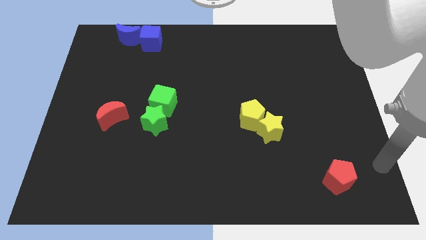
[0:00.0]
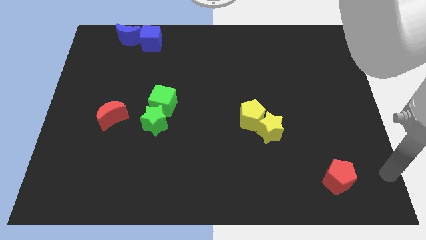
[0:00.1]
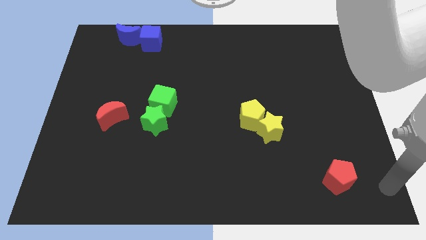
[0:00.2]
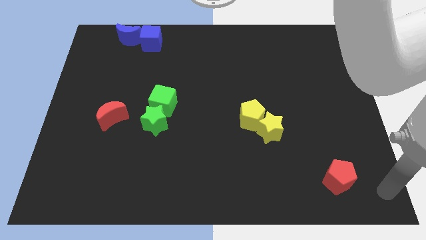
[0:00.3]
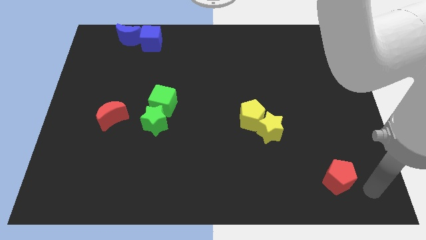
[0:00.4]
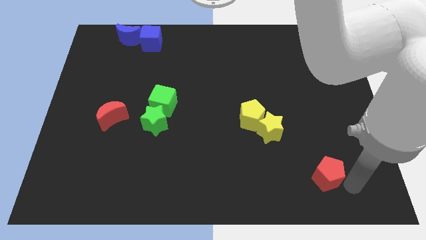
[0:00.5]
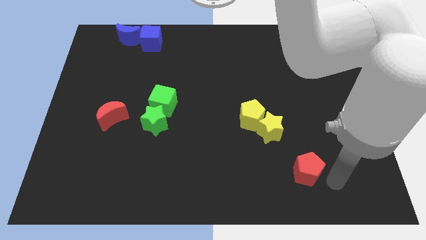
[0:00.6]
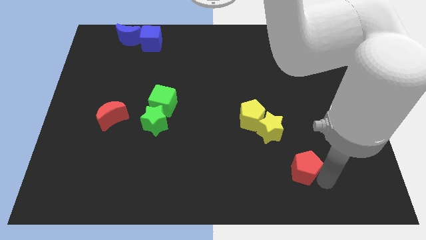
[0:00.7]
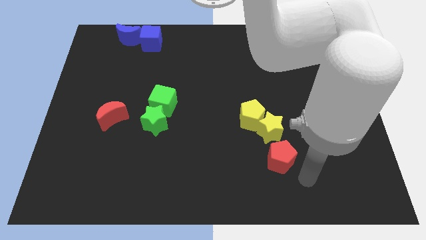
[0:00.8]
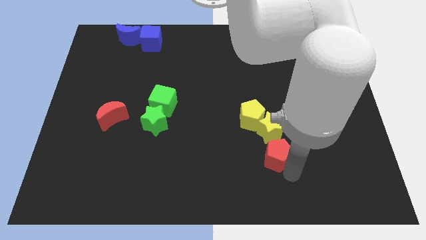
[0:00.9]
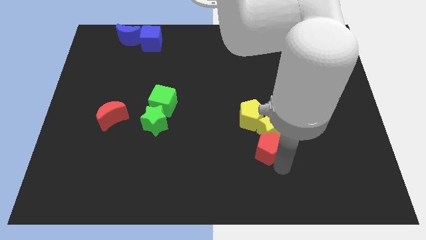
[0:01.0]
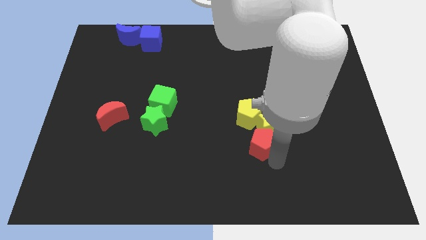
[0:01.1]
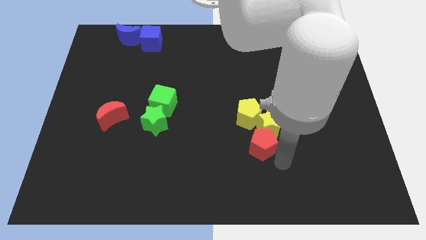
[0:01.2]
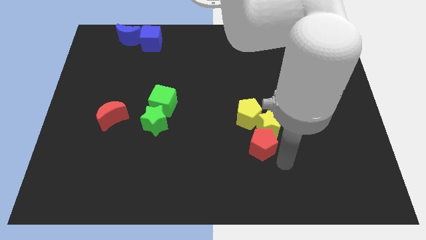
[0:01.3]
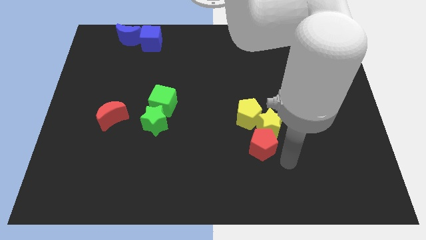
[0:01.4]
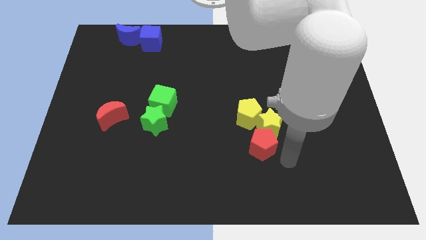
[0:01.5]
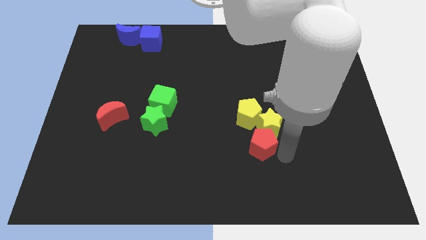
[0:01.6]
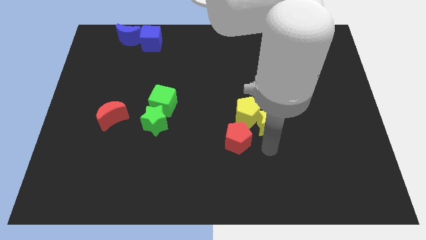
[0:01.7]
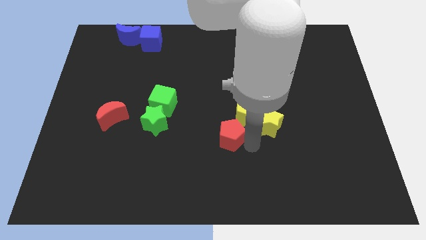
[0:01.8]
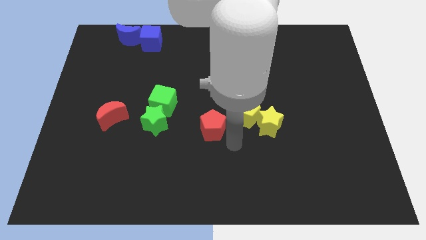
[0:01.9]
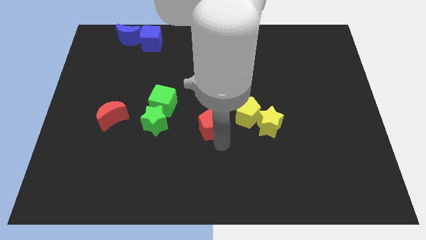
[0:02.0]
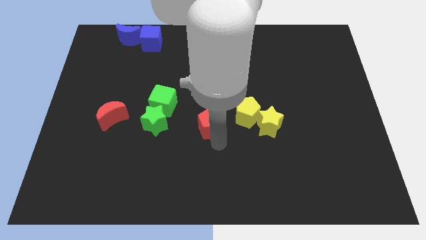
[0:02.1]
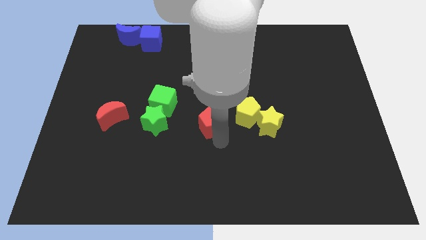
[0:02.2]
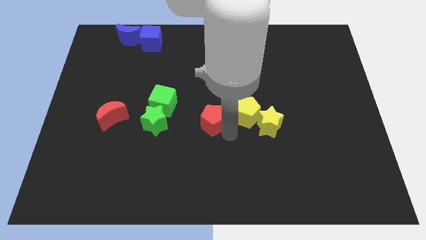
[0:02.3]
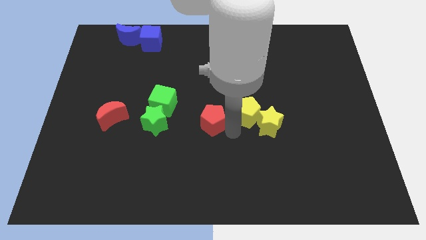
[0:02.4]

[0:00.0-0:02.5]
move the red pentagon right to the green star

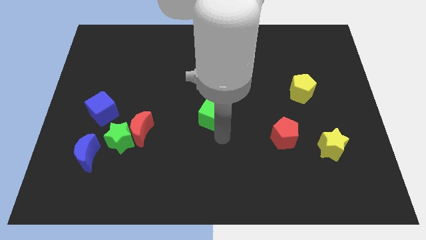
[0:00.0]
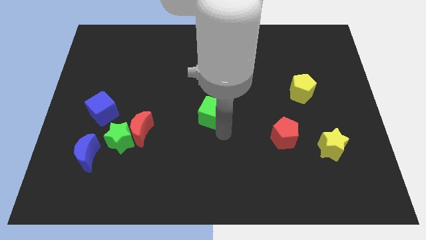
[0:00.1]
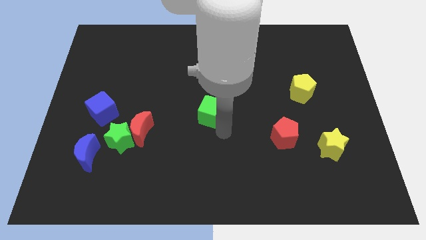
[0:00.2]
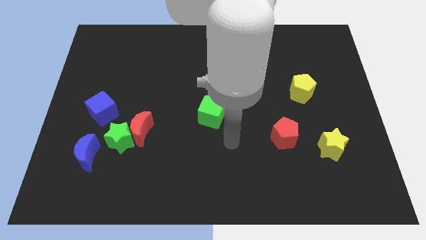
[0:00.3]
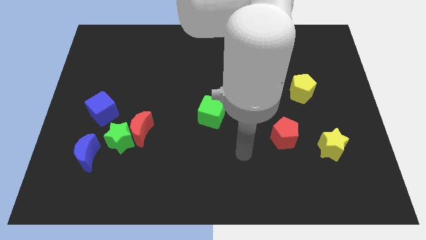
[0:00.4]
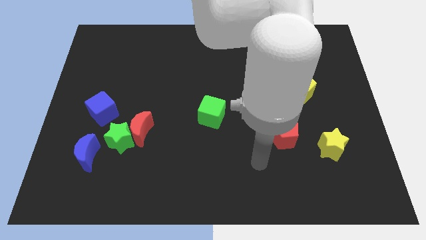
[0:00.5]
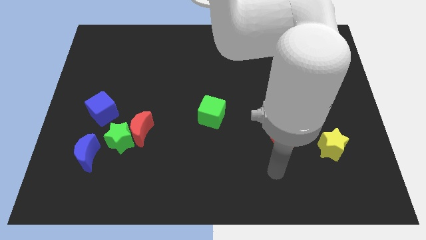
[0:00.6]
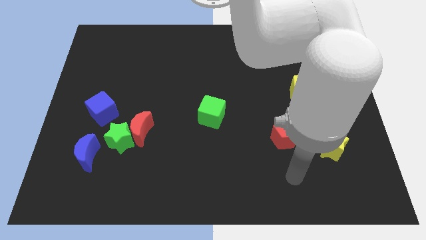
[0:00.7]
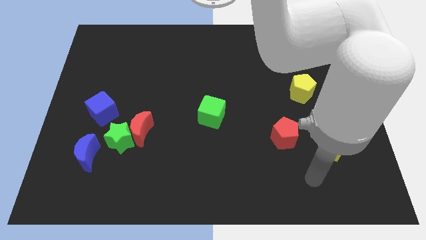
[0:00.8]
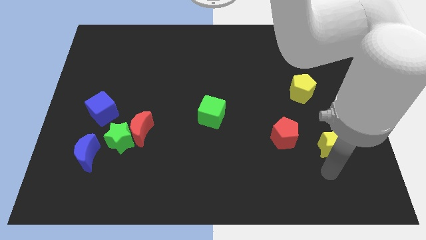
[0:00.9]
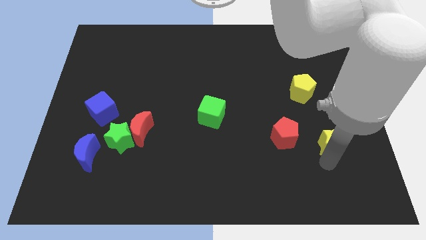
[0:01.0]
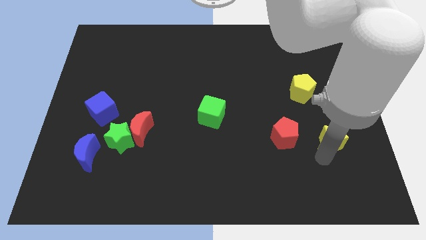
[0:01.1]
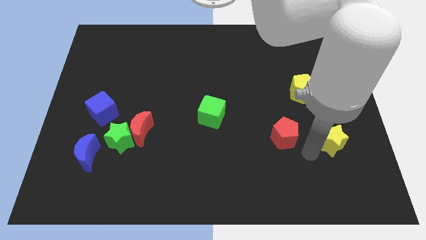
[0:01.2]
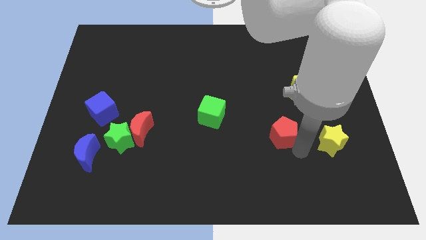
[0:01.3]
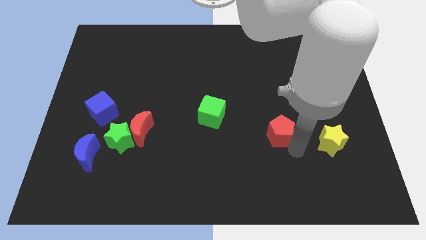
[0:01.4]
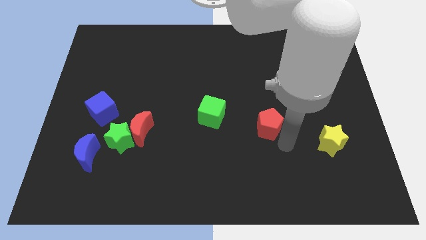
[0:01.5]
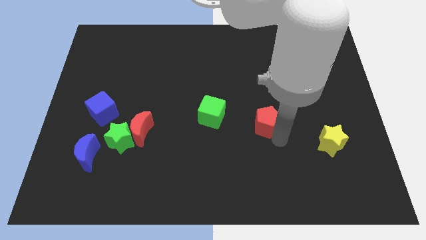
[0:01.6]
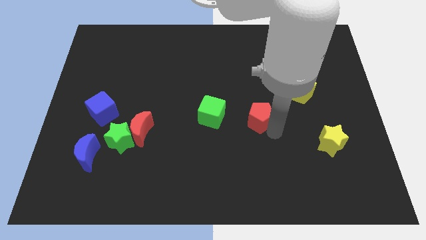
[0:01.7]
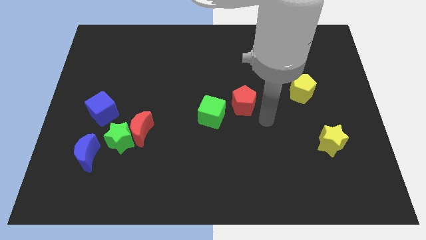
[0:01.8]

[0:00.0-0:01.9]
slide the red pentagon towards the green cube

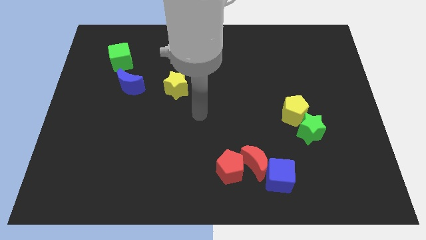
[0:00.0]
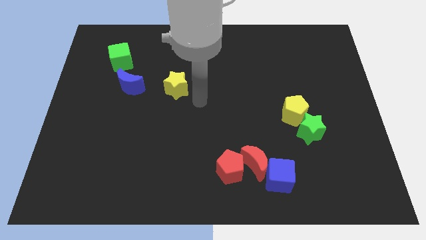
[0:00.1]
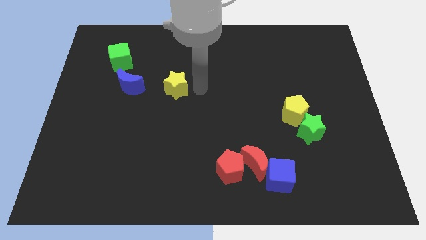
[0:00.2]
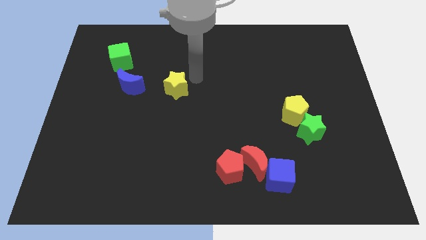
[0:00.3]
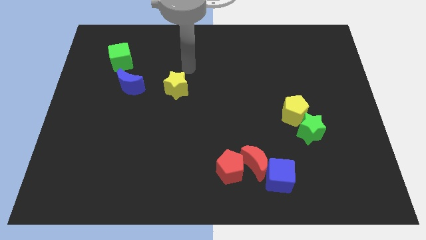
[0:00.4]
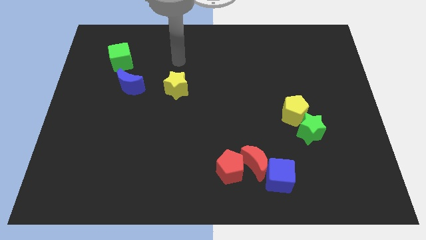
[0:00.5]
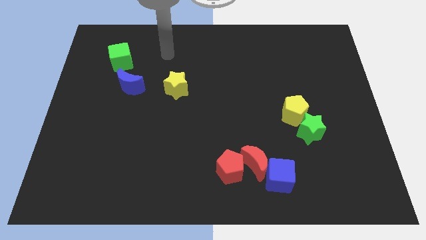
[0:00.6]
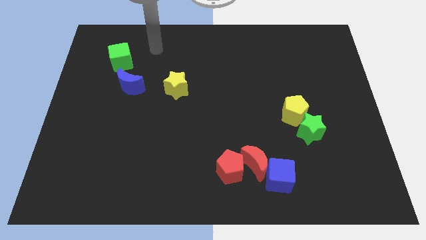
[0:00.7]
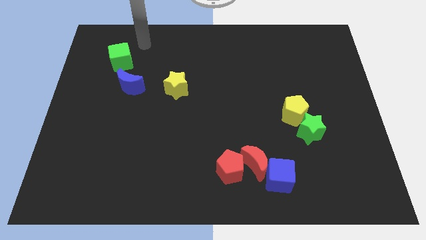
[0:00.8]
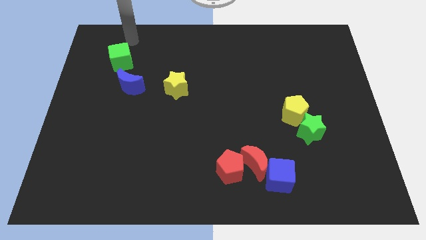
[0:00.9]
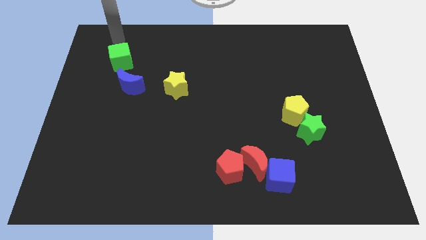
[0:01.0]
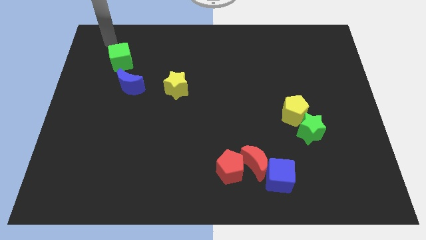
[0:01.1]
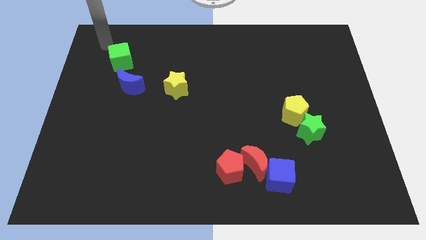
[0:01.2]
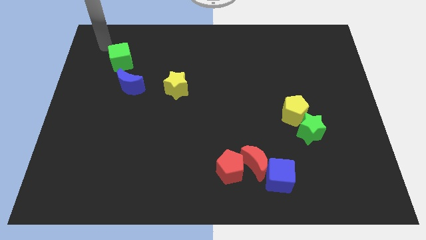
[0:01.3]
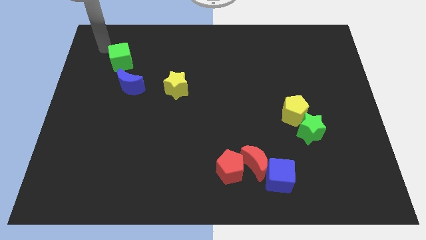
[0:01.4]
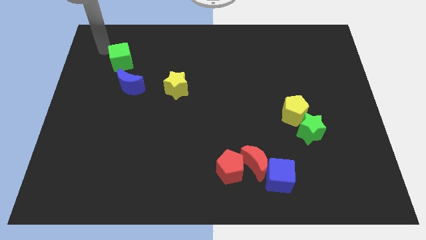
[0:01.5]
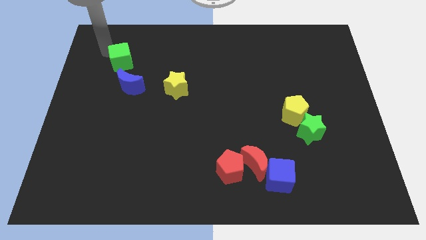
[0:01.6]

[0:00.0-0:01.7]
point the arm at the top left of the green cube

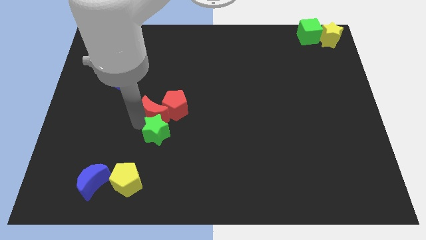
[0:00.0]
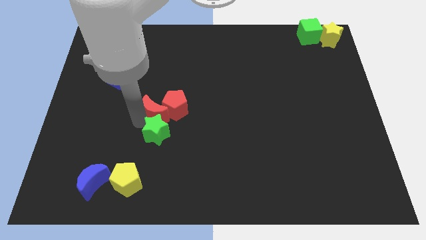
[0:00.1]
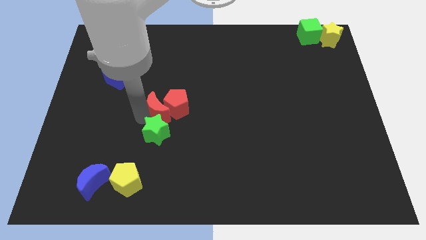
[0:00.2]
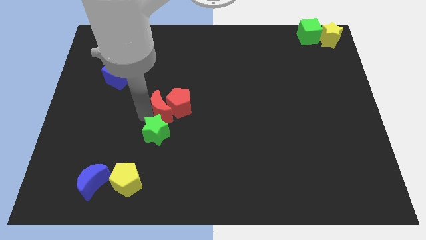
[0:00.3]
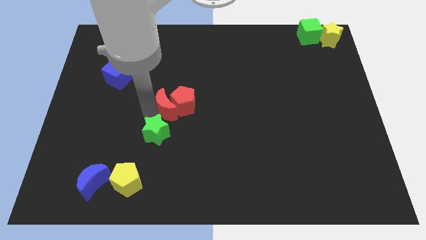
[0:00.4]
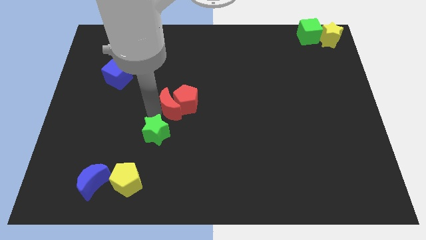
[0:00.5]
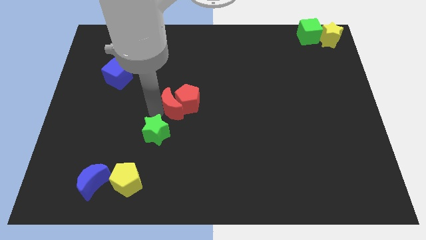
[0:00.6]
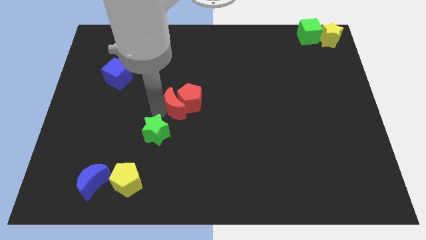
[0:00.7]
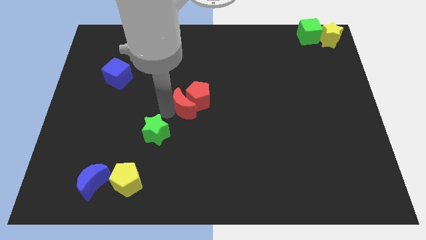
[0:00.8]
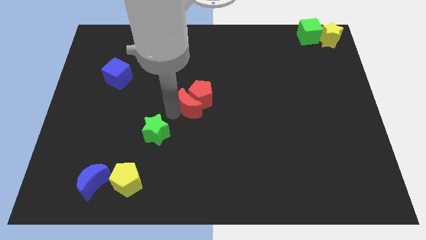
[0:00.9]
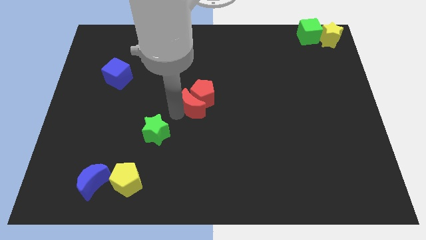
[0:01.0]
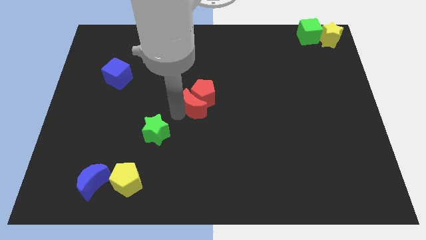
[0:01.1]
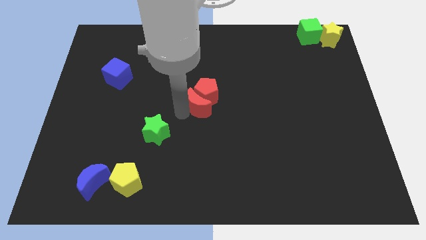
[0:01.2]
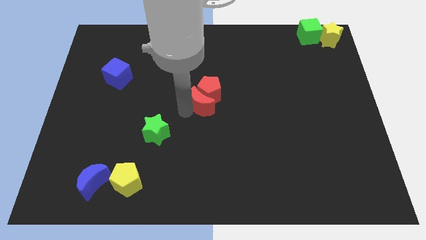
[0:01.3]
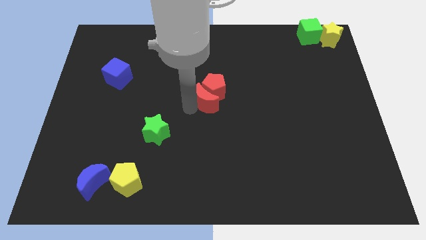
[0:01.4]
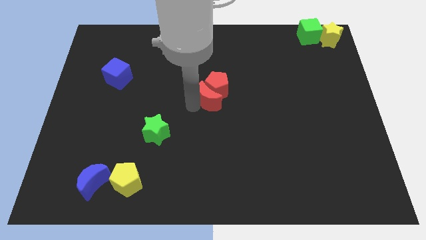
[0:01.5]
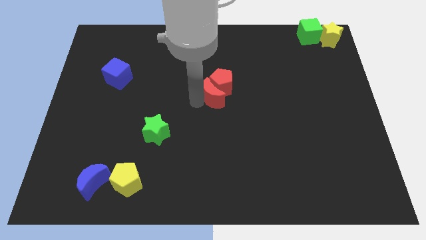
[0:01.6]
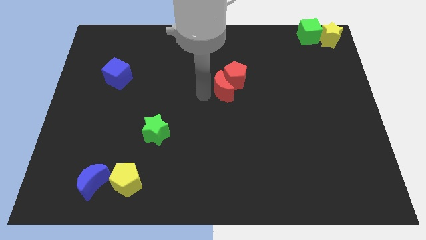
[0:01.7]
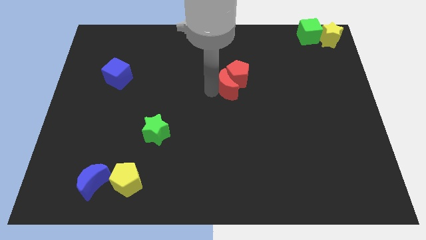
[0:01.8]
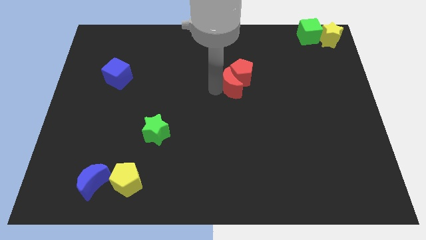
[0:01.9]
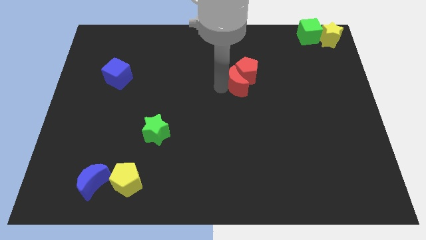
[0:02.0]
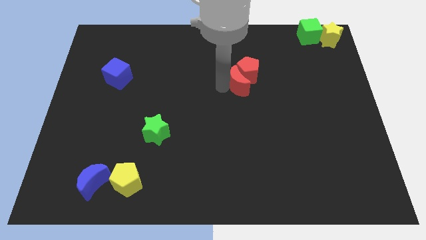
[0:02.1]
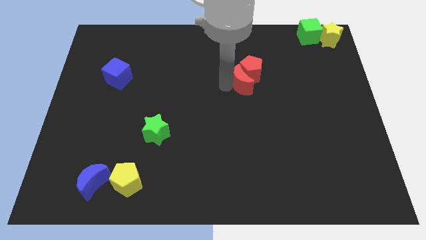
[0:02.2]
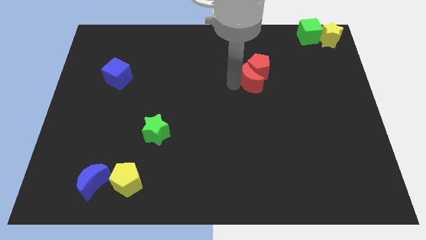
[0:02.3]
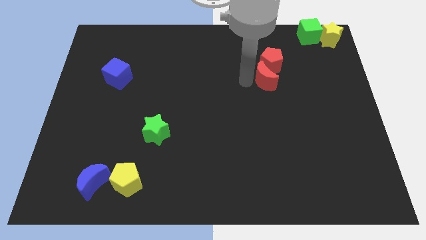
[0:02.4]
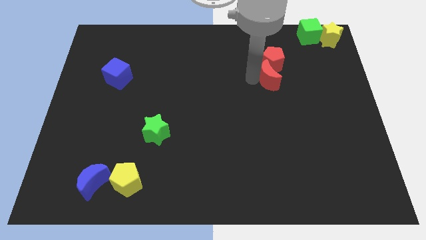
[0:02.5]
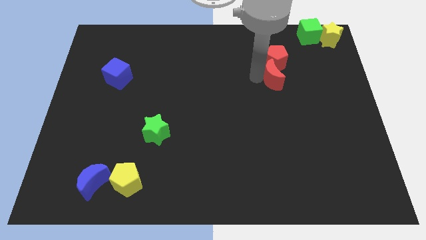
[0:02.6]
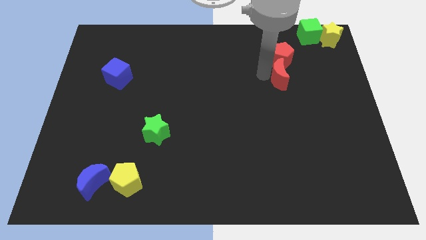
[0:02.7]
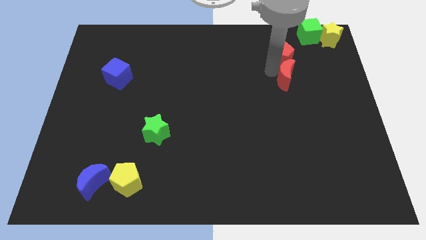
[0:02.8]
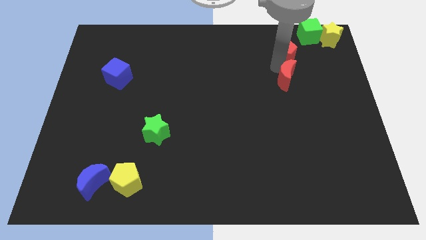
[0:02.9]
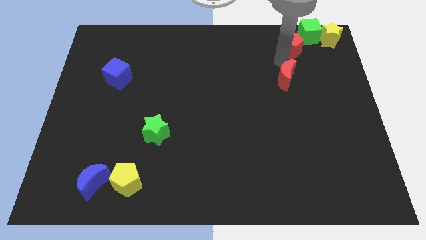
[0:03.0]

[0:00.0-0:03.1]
push the red blocks towards the green cube
